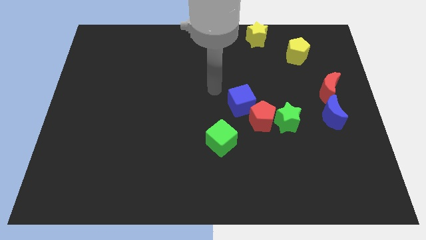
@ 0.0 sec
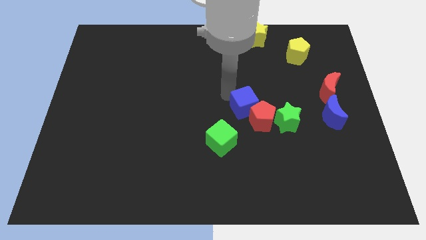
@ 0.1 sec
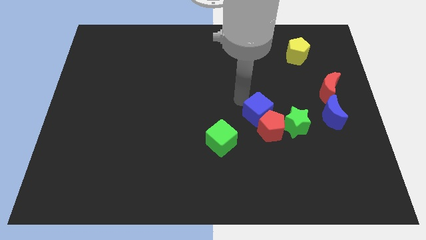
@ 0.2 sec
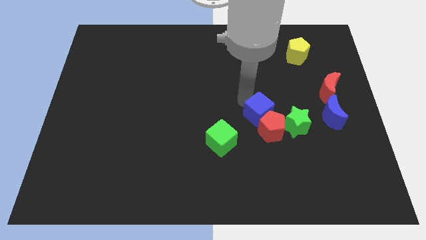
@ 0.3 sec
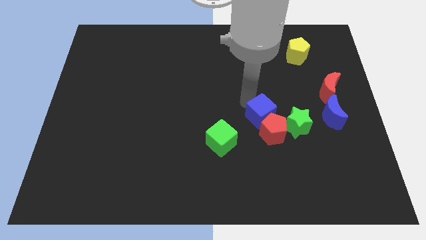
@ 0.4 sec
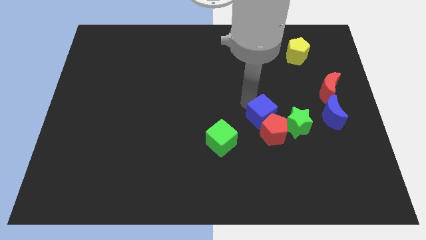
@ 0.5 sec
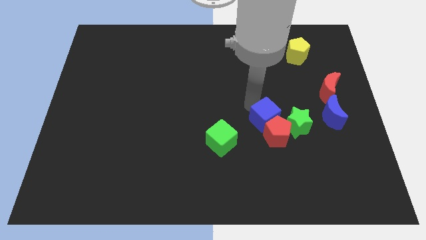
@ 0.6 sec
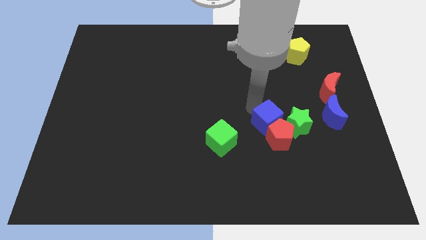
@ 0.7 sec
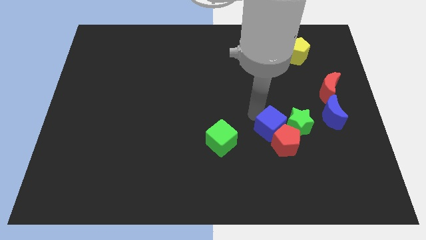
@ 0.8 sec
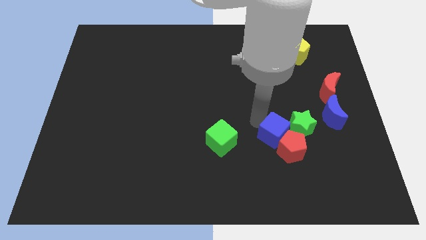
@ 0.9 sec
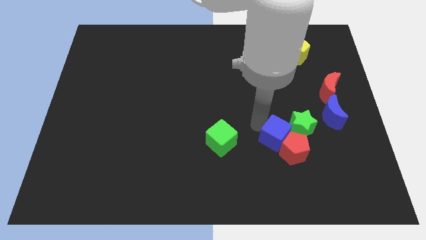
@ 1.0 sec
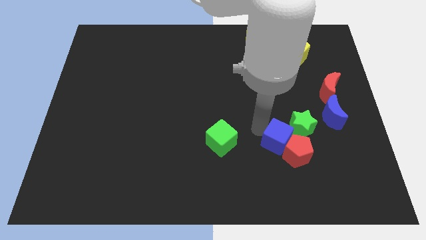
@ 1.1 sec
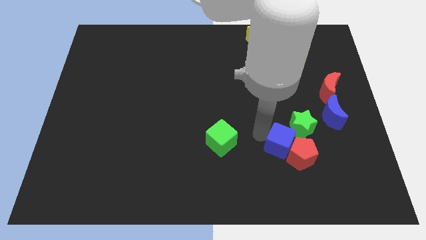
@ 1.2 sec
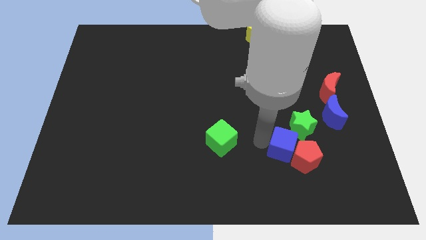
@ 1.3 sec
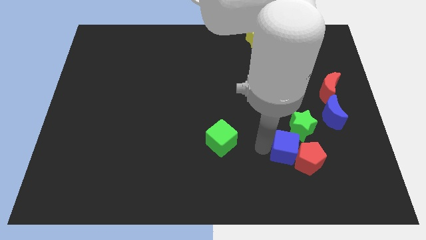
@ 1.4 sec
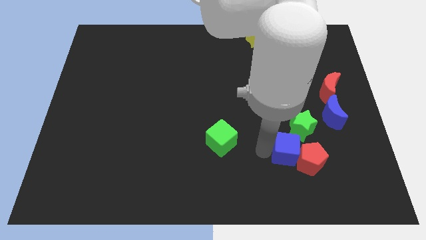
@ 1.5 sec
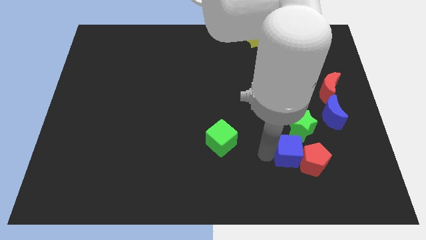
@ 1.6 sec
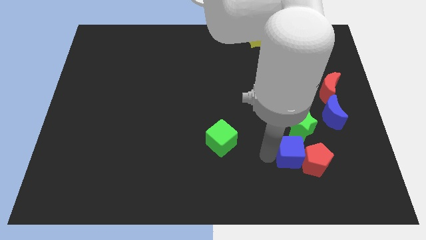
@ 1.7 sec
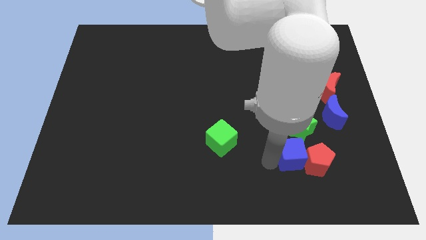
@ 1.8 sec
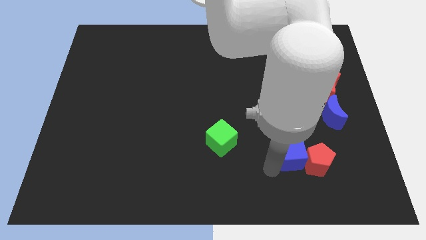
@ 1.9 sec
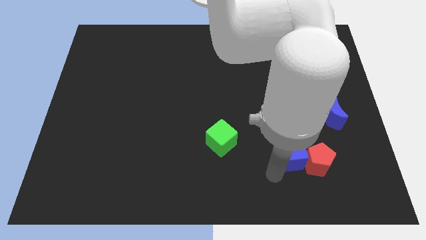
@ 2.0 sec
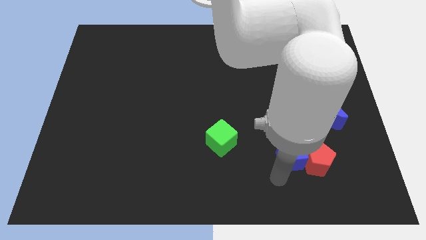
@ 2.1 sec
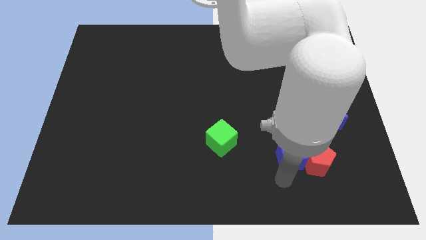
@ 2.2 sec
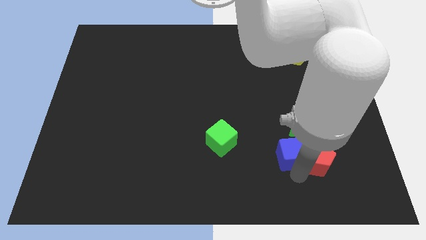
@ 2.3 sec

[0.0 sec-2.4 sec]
move the red pentagon and blue cube to the bottom right

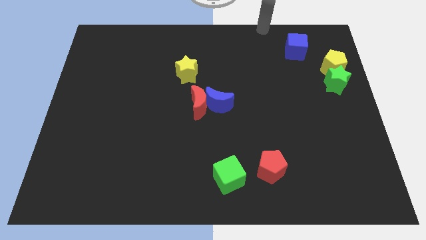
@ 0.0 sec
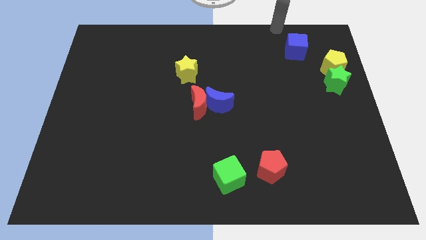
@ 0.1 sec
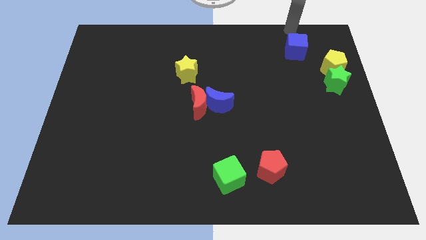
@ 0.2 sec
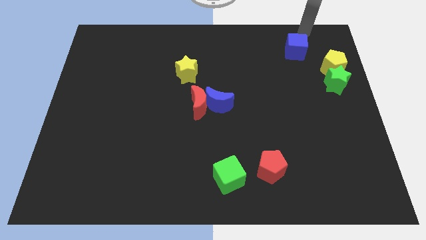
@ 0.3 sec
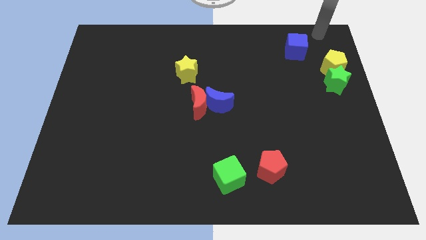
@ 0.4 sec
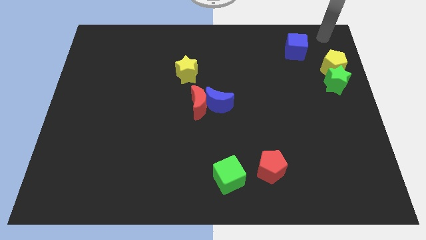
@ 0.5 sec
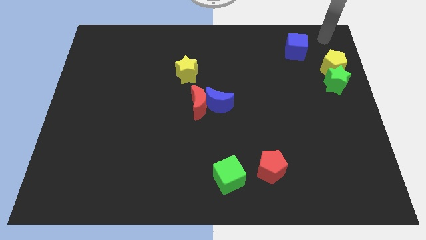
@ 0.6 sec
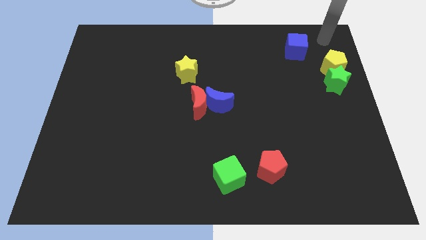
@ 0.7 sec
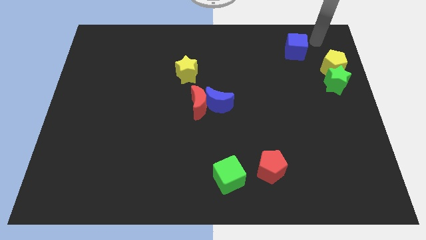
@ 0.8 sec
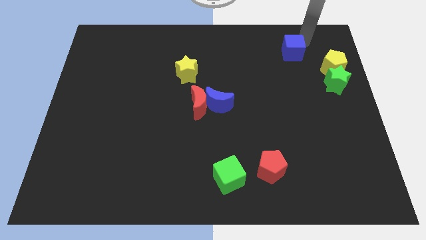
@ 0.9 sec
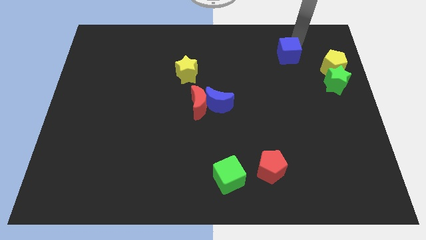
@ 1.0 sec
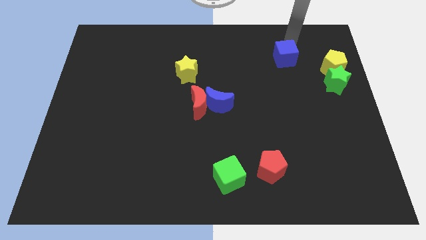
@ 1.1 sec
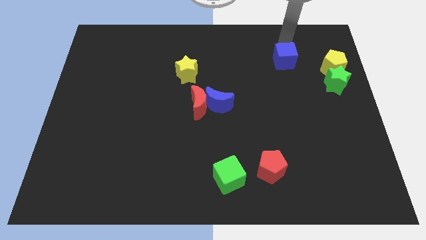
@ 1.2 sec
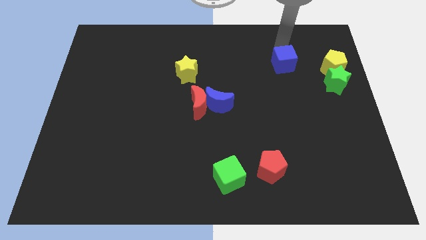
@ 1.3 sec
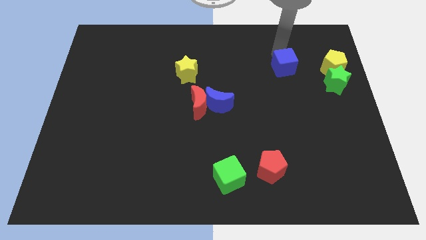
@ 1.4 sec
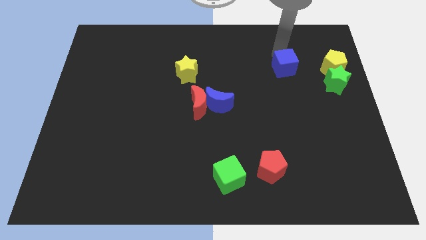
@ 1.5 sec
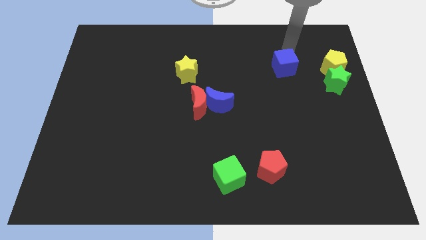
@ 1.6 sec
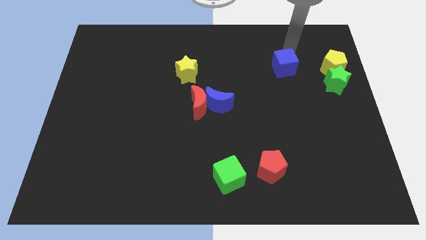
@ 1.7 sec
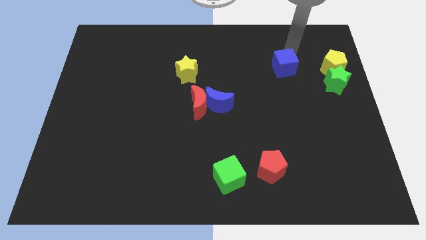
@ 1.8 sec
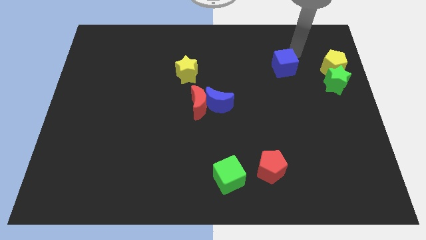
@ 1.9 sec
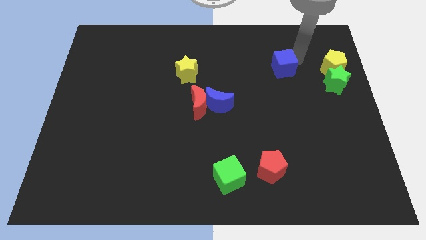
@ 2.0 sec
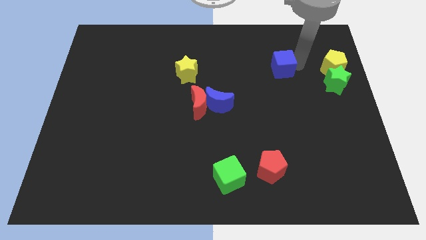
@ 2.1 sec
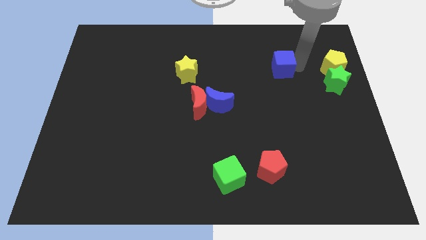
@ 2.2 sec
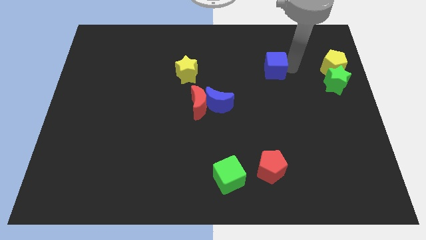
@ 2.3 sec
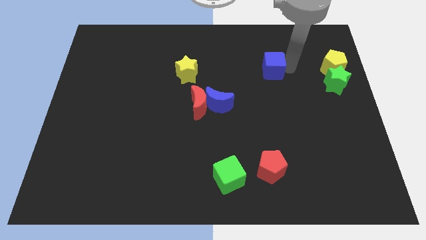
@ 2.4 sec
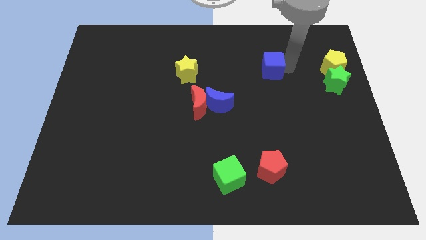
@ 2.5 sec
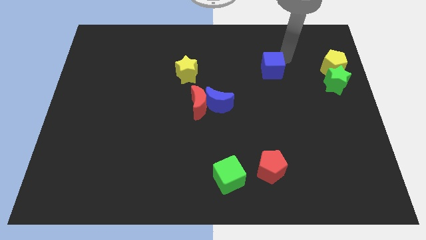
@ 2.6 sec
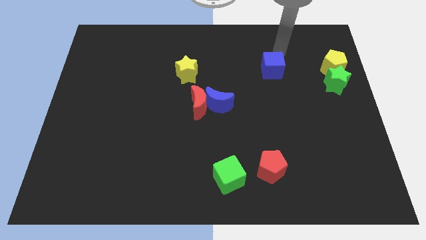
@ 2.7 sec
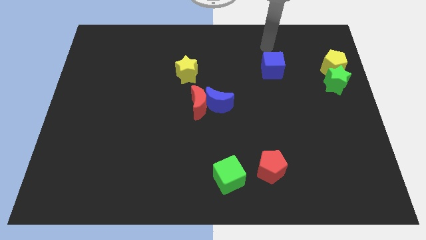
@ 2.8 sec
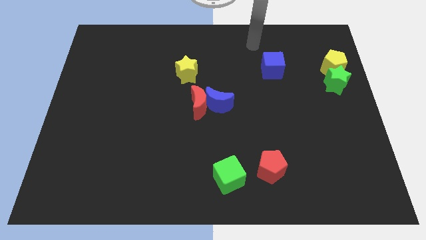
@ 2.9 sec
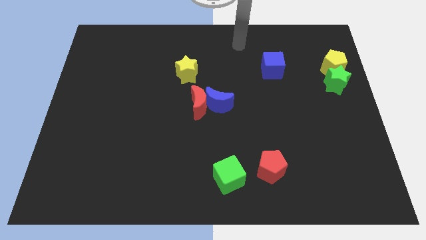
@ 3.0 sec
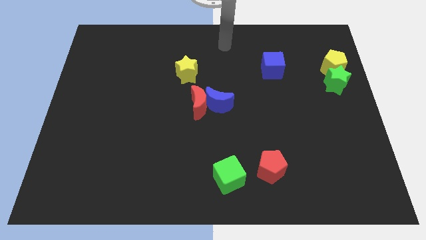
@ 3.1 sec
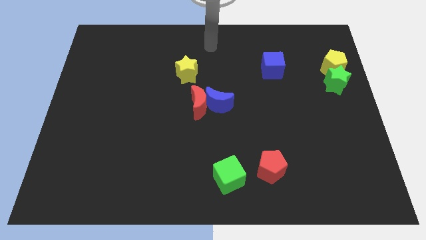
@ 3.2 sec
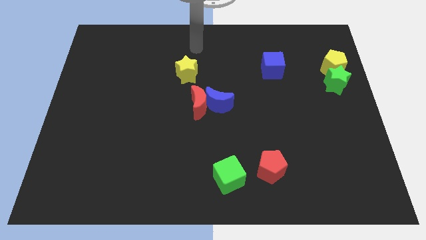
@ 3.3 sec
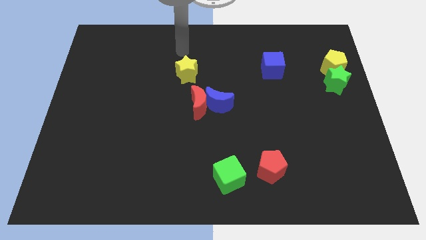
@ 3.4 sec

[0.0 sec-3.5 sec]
put the blue cube in between the yellow star and yellow pentagon

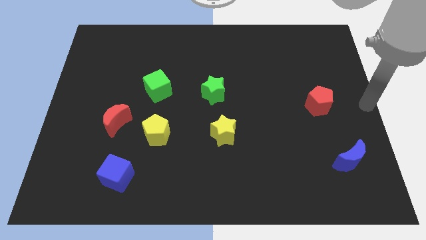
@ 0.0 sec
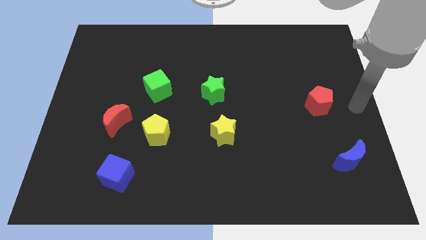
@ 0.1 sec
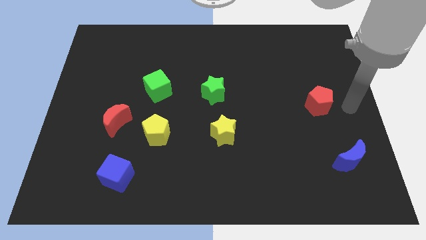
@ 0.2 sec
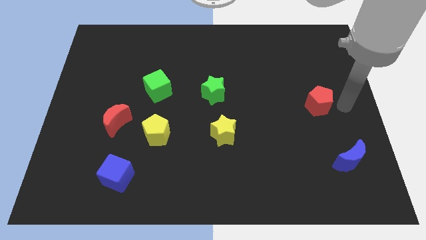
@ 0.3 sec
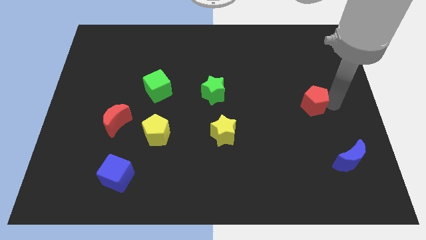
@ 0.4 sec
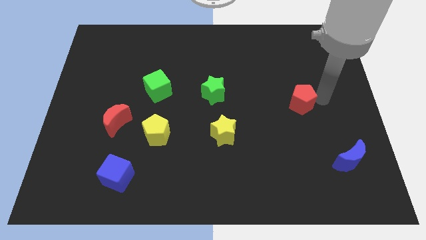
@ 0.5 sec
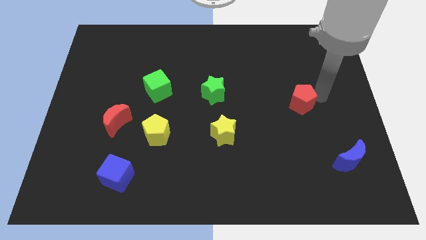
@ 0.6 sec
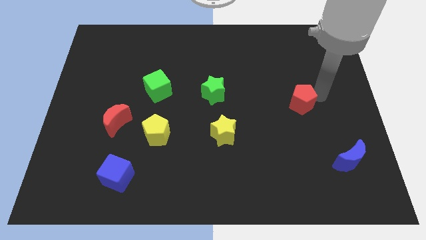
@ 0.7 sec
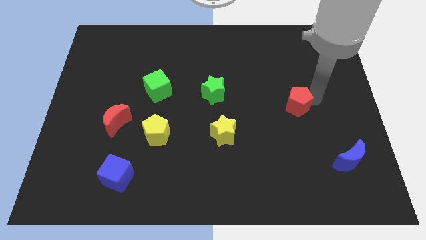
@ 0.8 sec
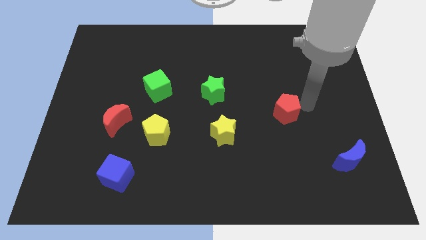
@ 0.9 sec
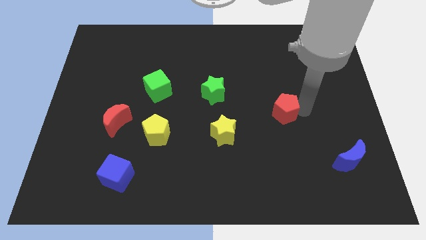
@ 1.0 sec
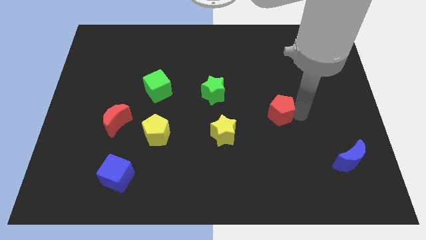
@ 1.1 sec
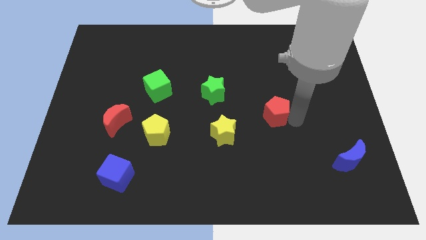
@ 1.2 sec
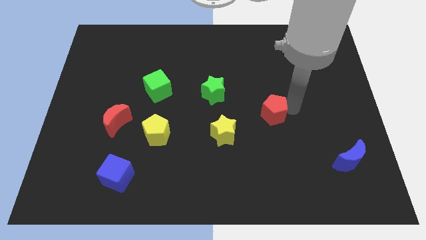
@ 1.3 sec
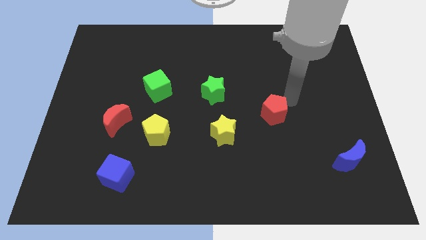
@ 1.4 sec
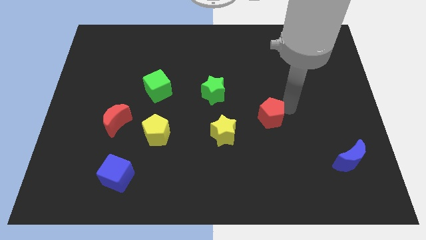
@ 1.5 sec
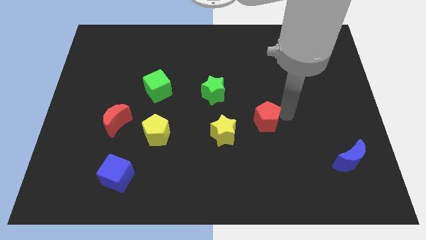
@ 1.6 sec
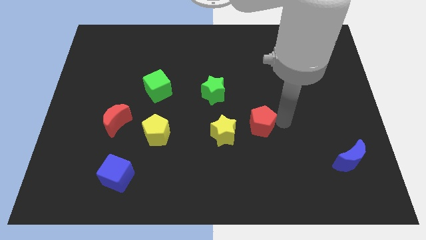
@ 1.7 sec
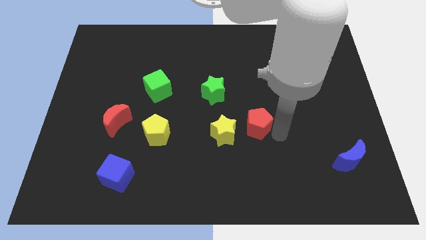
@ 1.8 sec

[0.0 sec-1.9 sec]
slide the red pentagon to the top right side of the yellow star

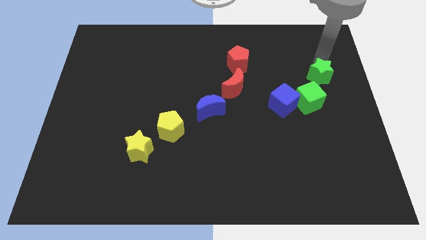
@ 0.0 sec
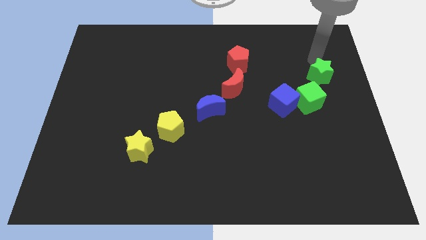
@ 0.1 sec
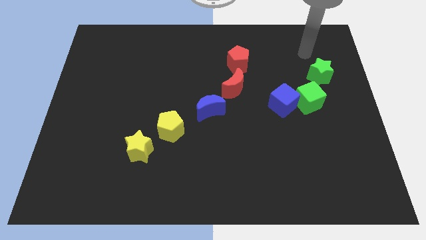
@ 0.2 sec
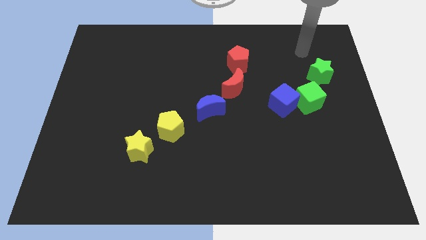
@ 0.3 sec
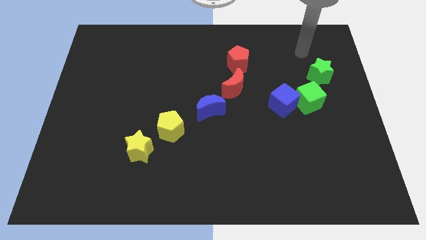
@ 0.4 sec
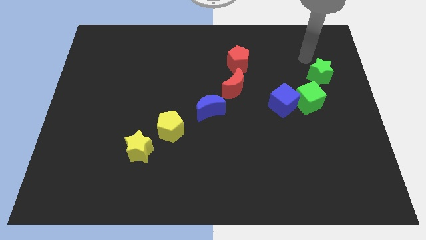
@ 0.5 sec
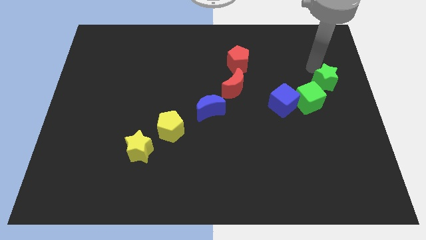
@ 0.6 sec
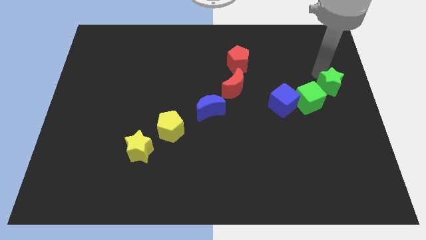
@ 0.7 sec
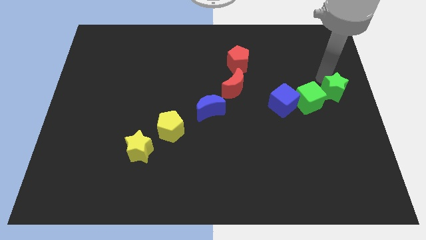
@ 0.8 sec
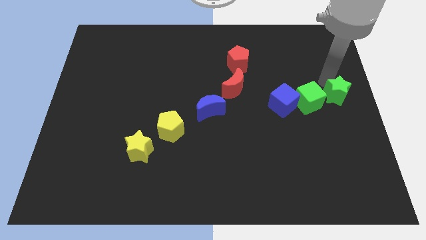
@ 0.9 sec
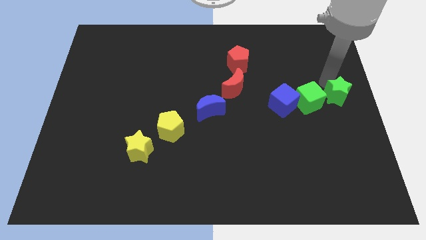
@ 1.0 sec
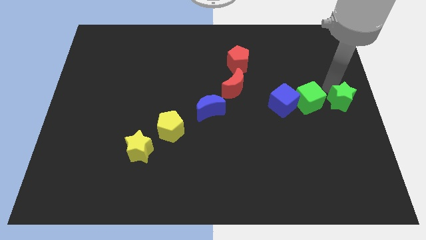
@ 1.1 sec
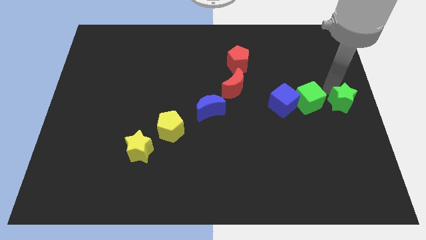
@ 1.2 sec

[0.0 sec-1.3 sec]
drag the green star parallel right to the green cube
